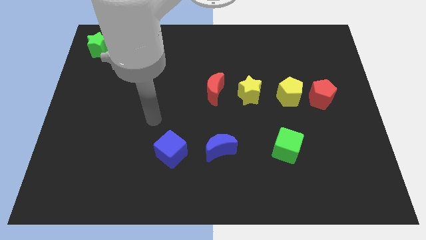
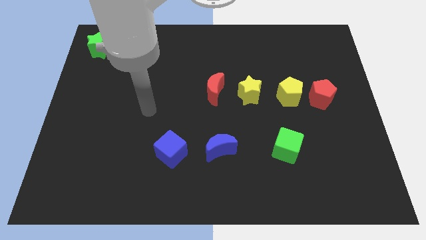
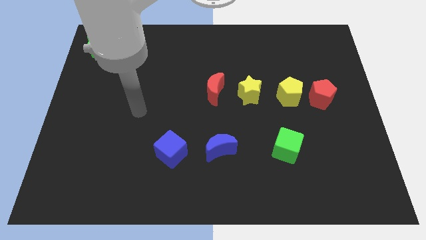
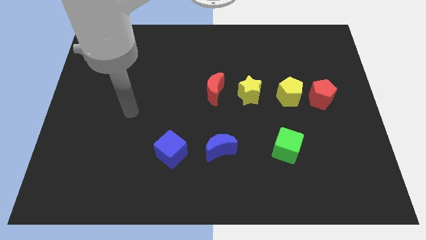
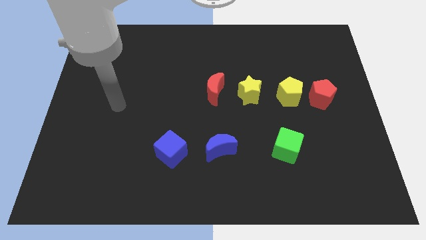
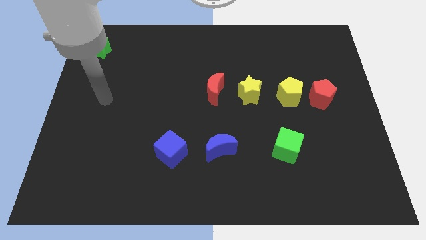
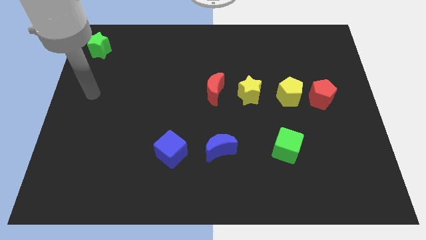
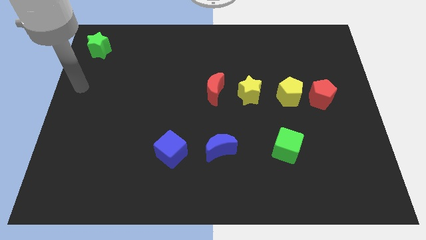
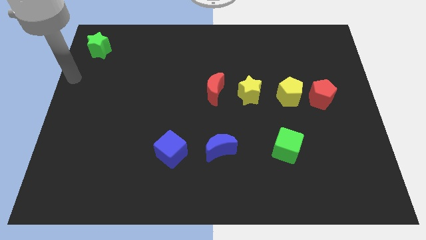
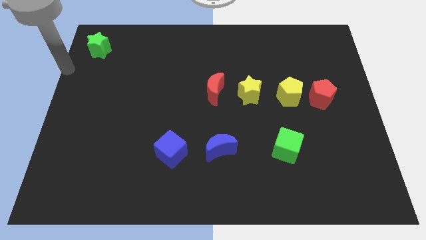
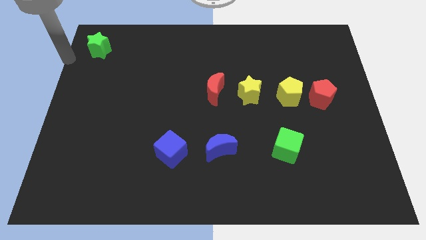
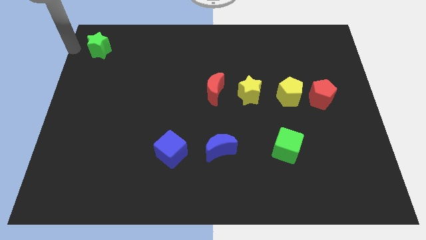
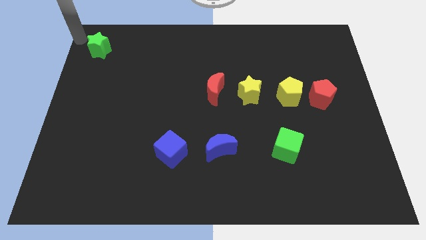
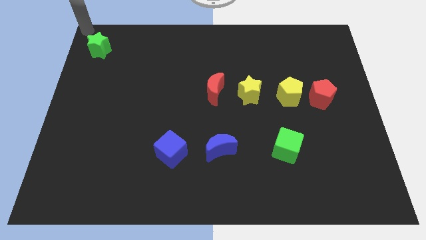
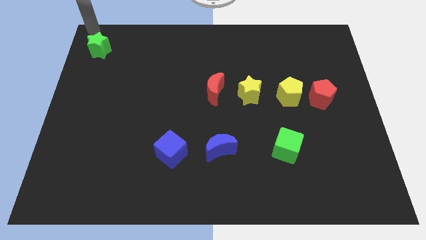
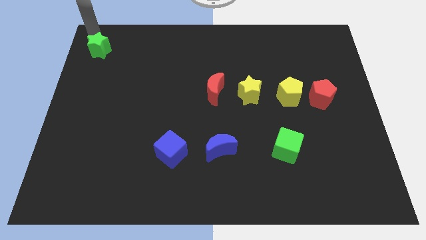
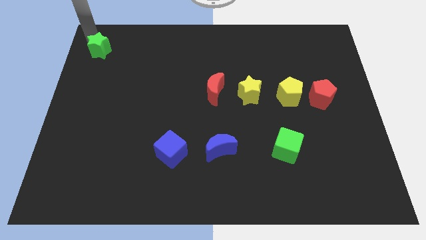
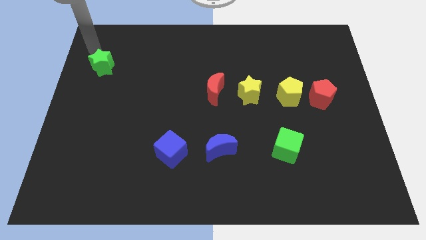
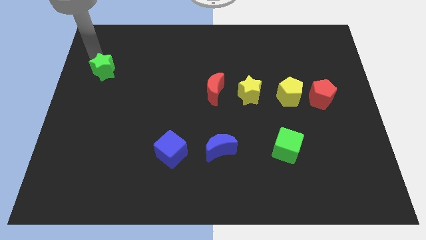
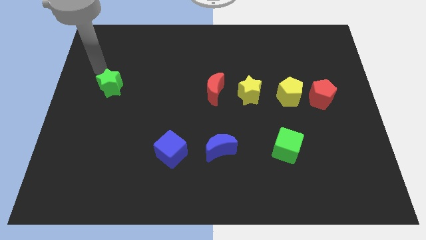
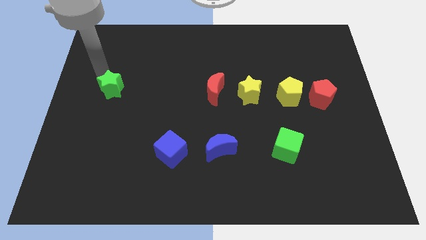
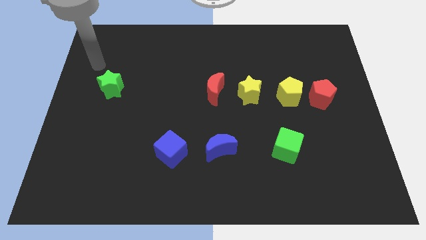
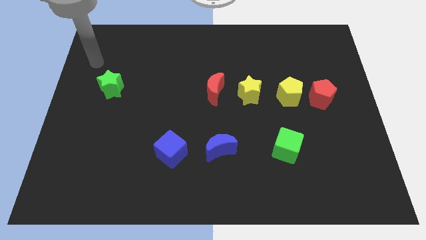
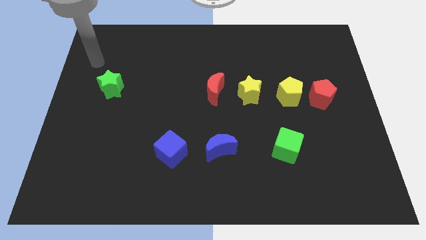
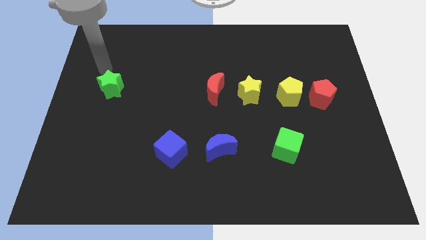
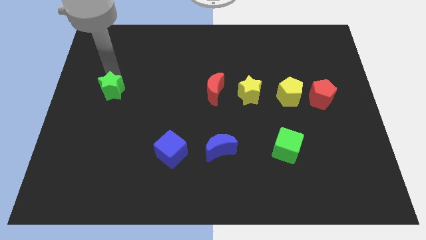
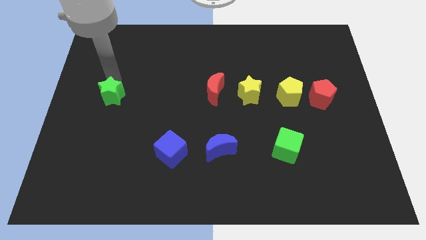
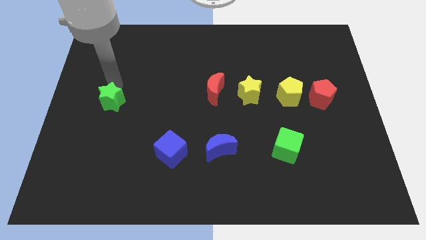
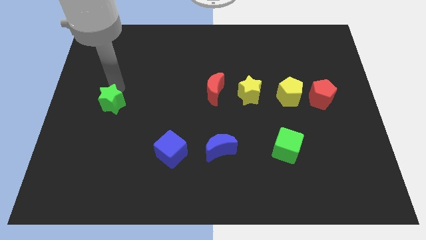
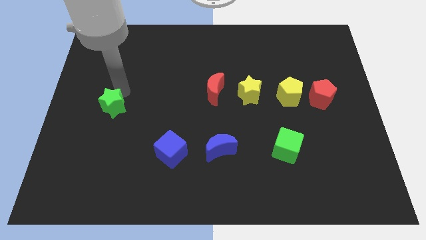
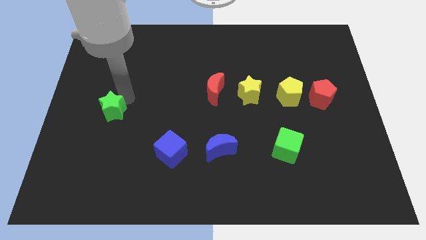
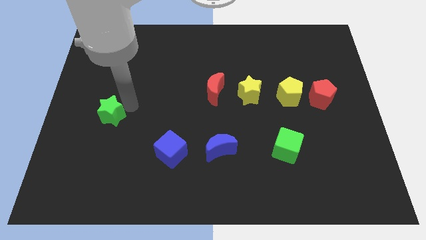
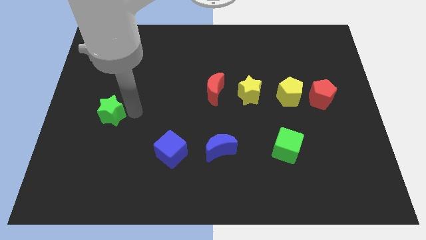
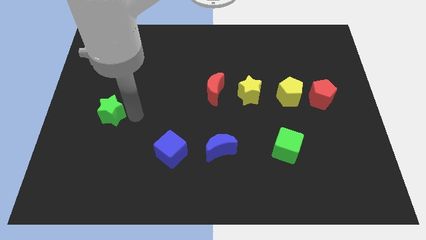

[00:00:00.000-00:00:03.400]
push the green star towards downwards

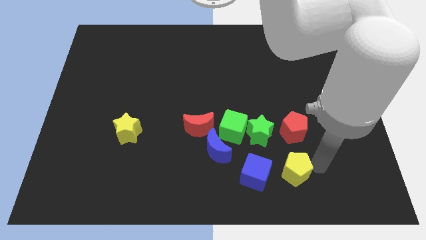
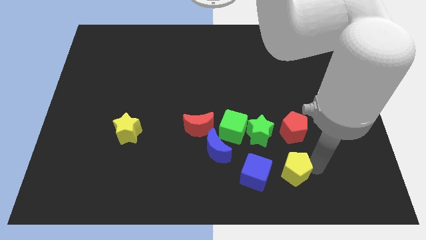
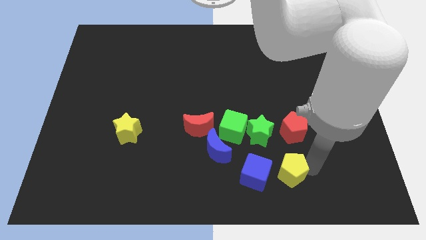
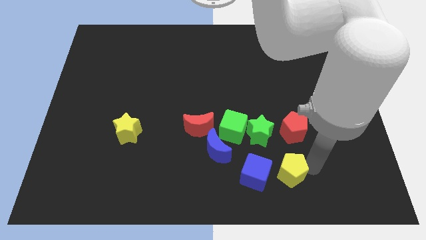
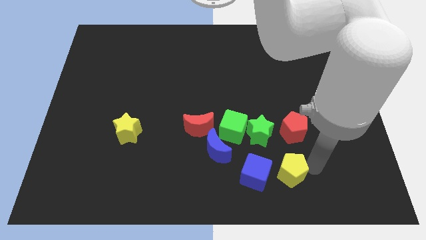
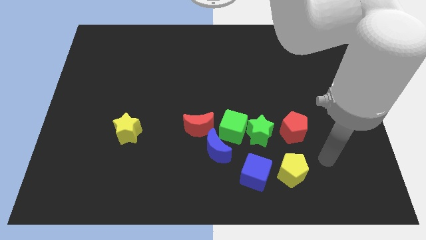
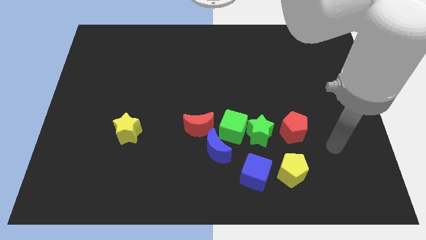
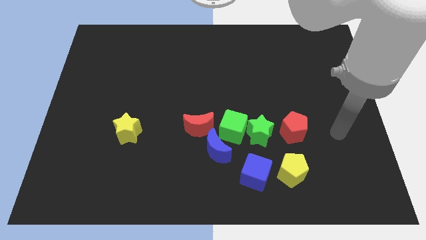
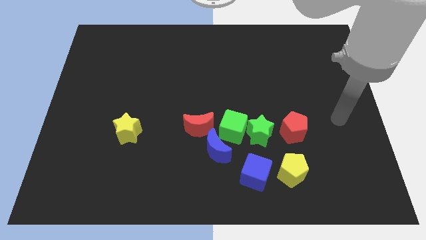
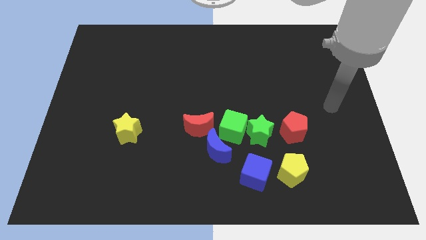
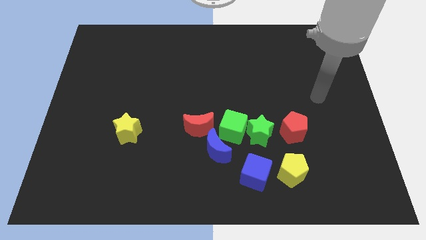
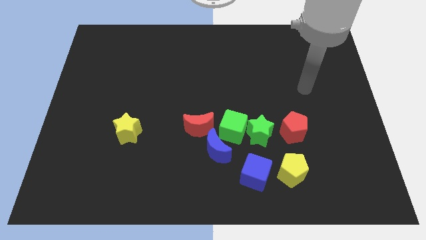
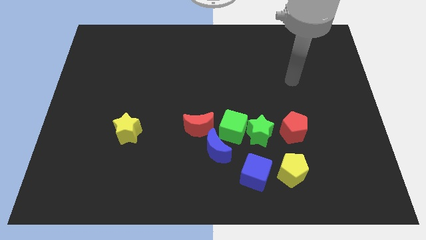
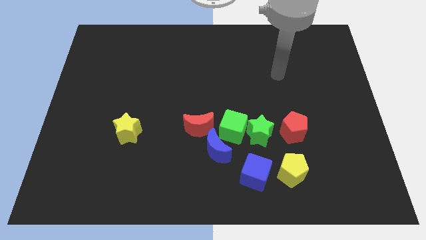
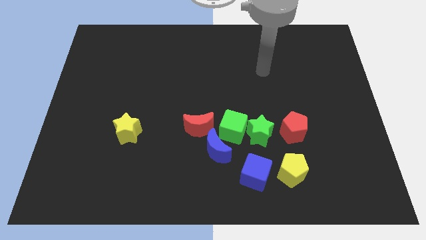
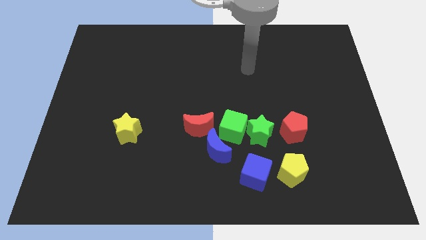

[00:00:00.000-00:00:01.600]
move the arm towards the center of the board

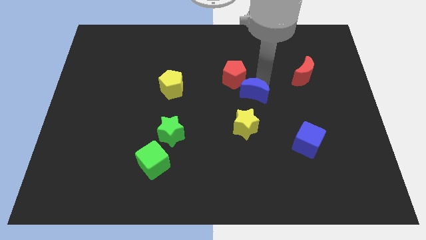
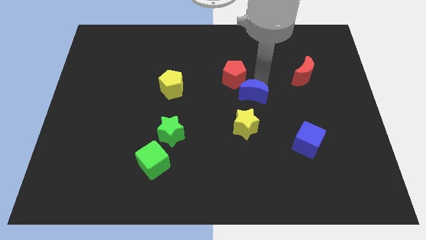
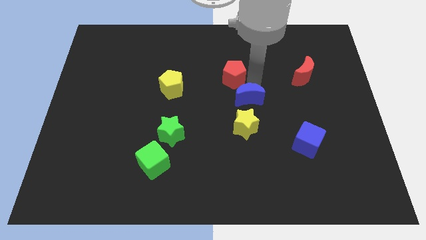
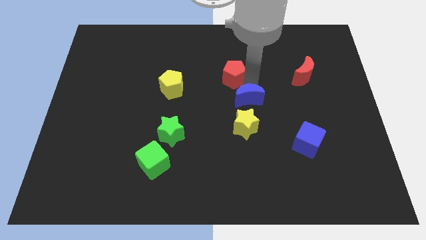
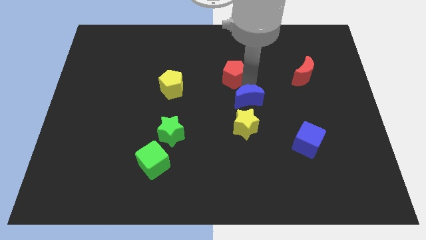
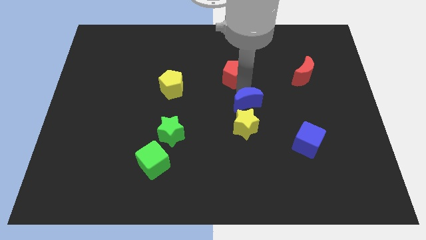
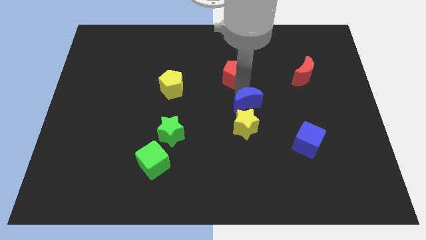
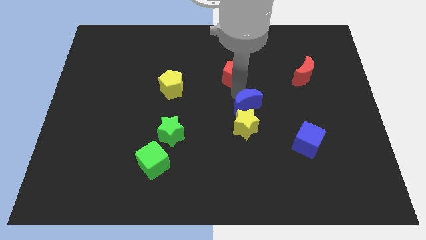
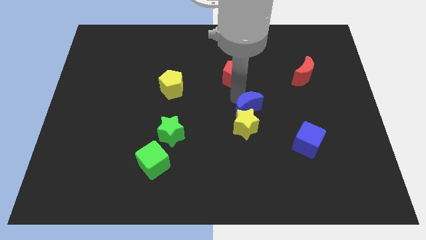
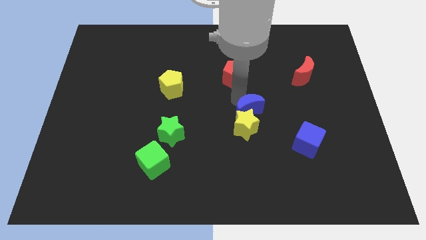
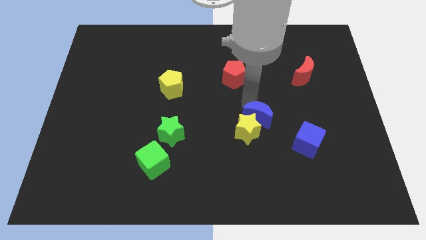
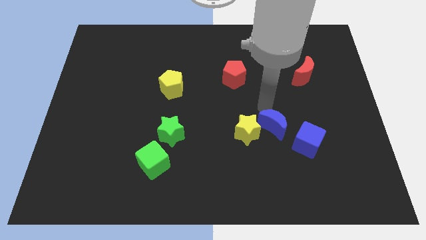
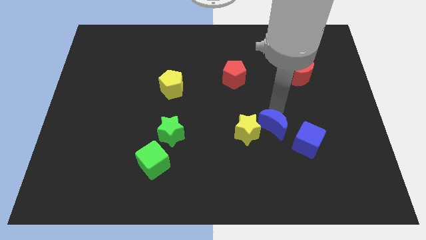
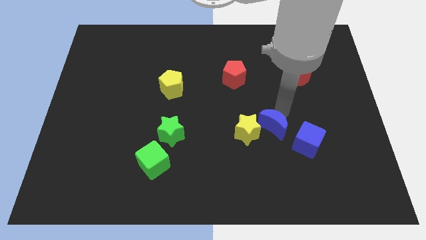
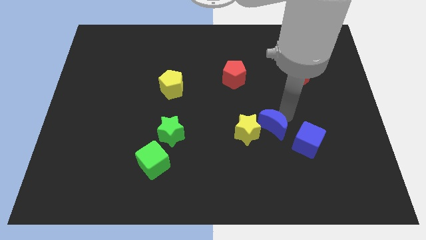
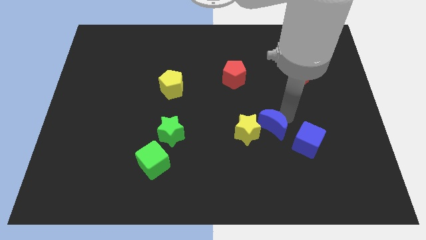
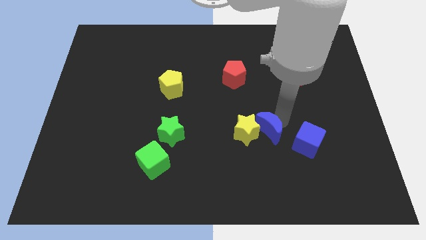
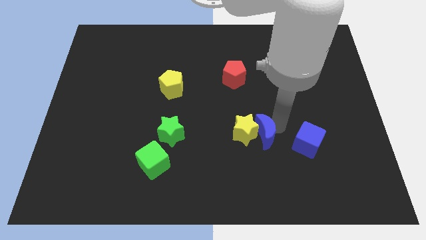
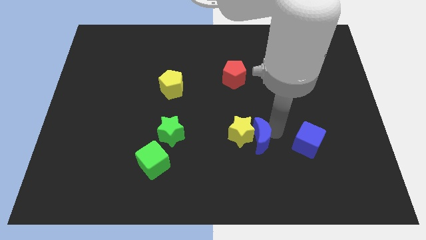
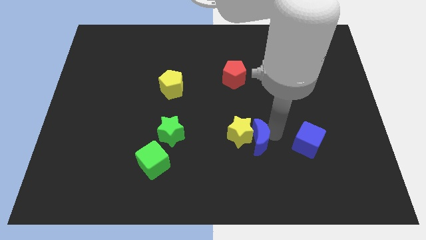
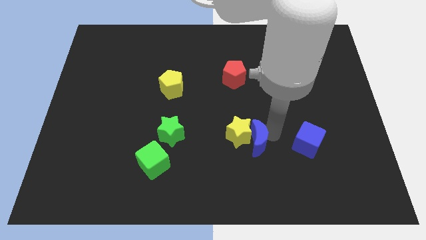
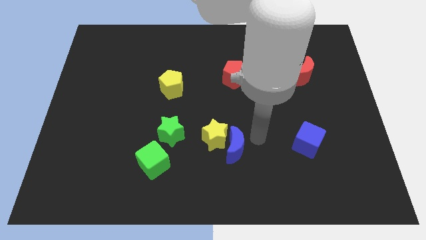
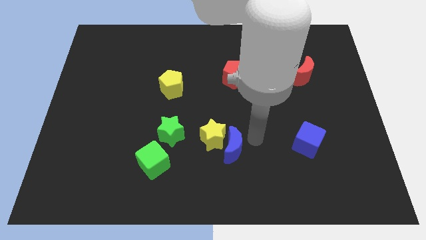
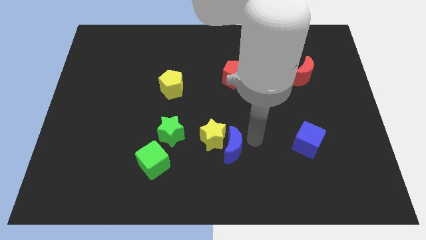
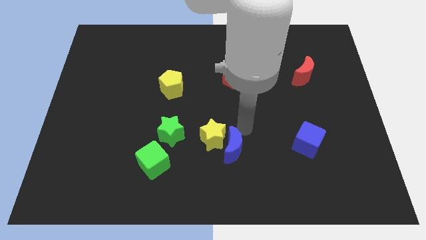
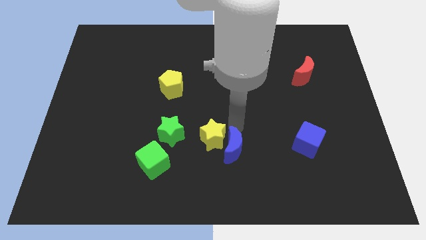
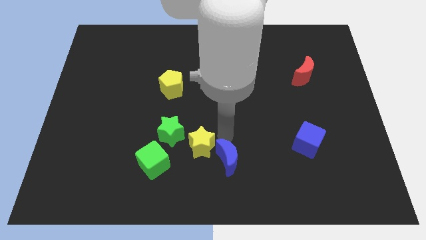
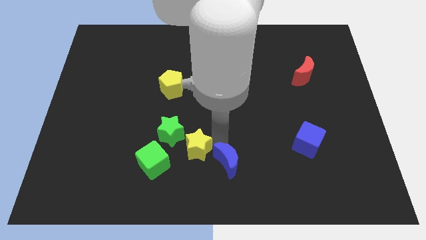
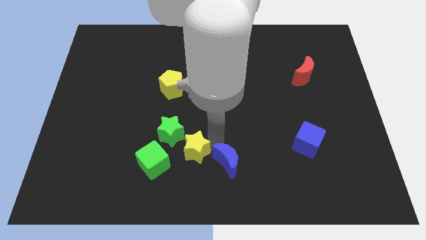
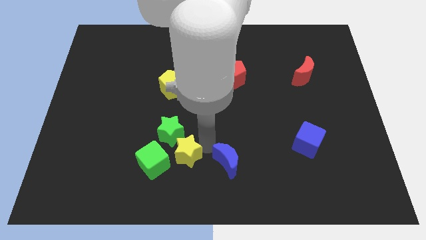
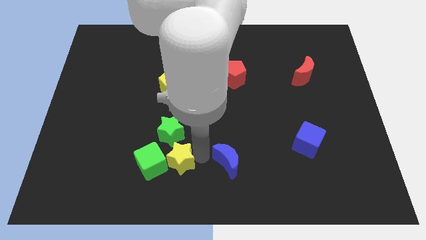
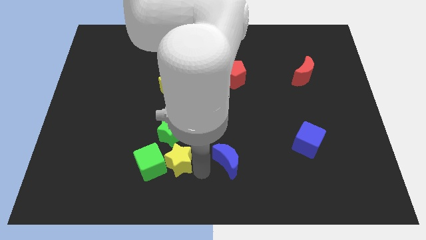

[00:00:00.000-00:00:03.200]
push yellow star below green star

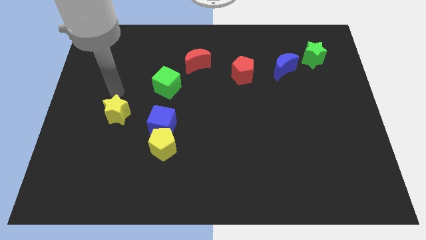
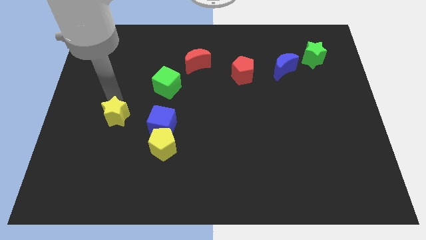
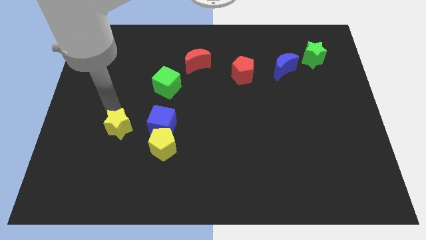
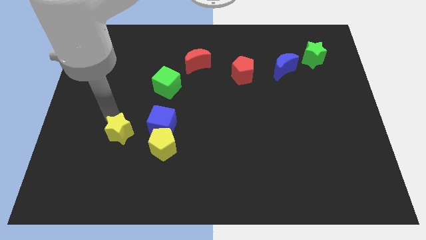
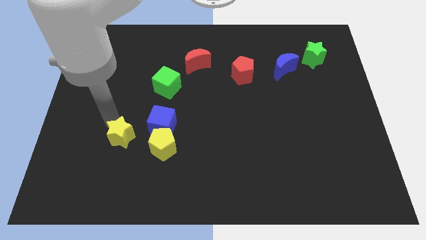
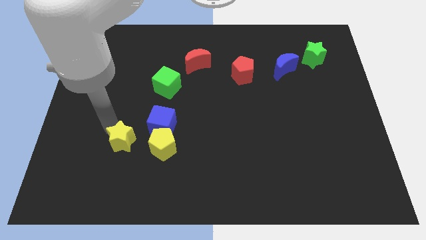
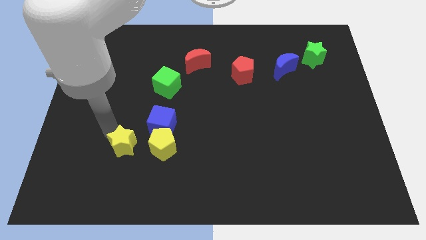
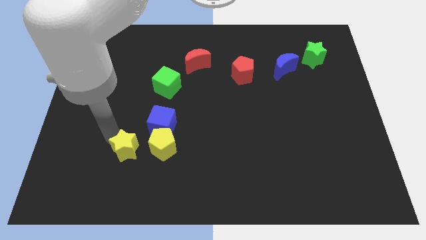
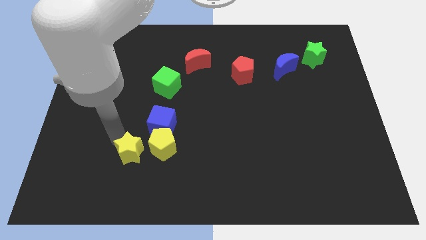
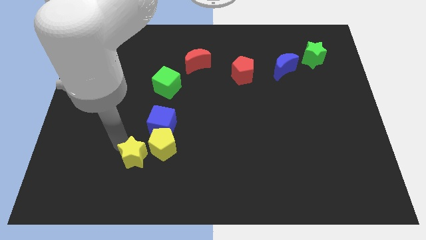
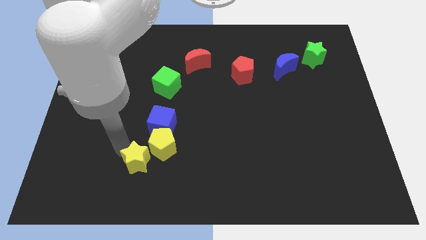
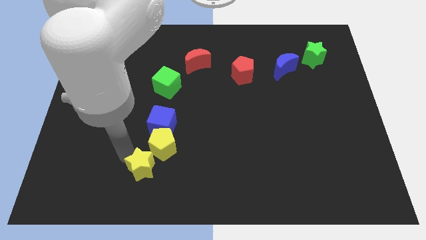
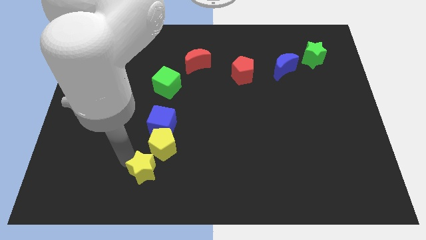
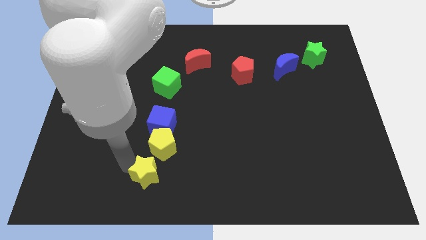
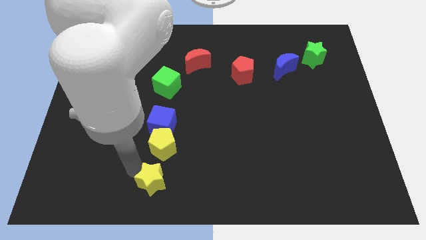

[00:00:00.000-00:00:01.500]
move yellow star close to the yellow pentagon
